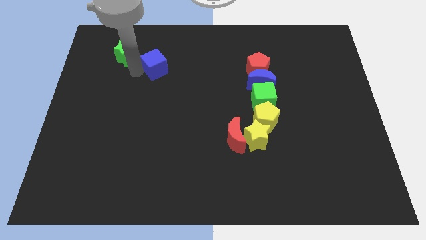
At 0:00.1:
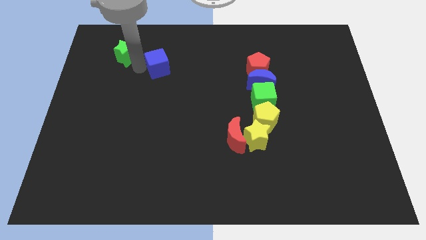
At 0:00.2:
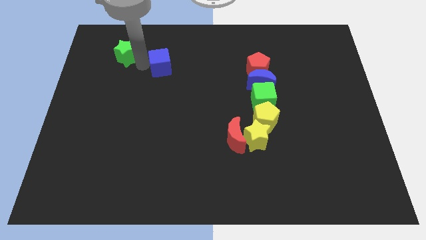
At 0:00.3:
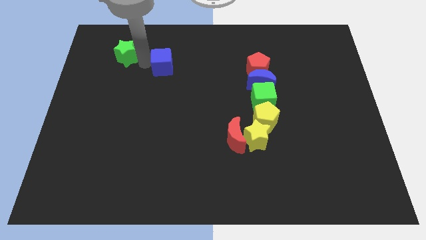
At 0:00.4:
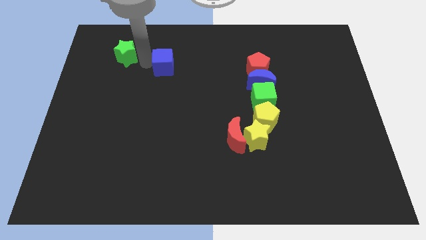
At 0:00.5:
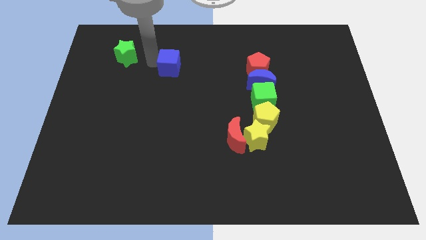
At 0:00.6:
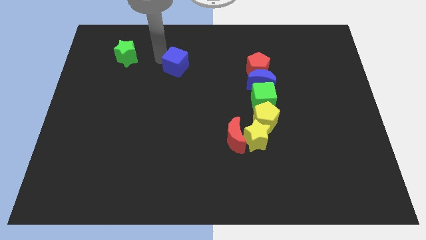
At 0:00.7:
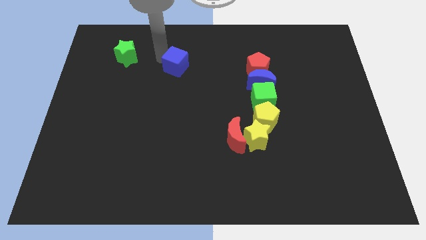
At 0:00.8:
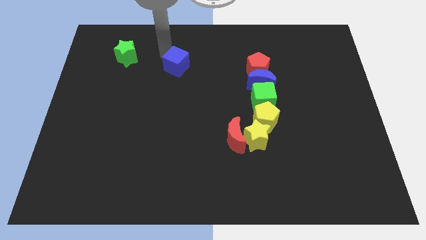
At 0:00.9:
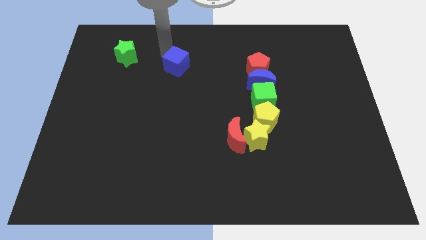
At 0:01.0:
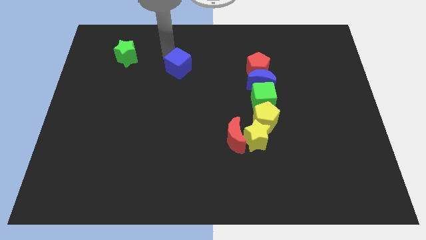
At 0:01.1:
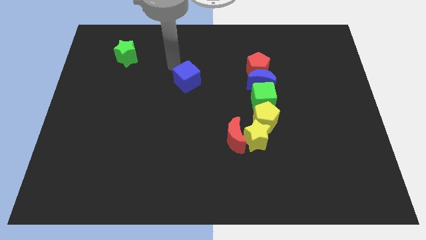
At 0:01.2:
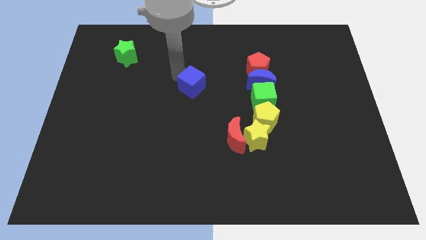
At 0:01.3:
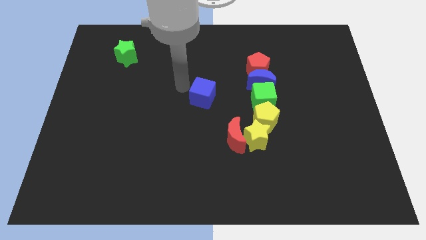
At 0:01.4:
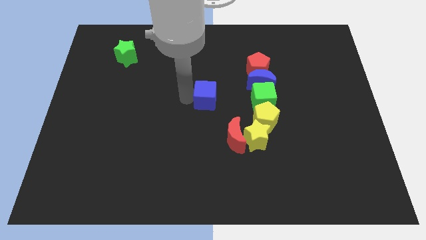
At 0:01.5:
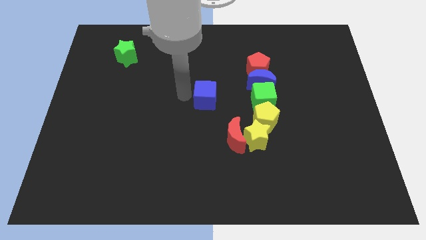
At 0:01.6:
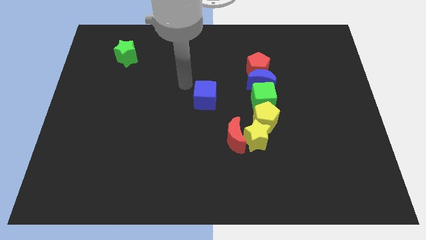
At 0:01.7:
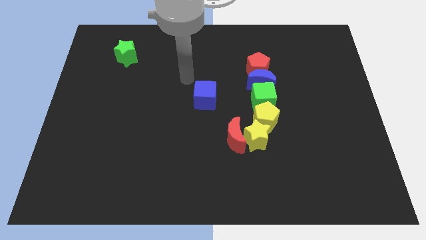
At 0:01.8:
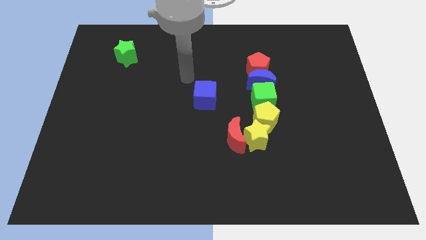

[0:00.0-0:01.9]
place the blue cube at the center of the board

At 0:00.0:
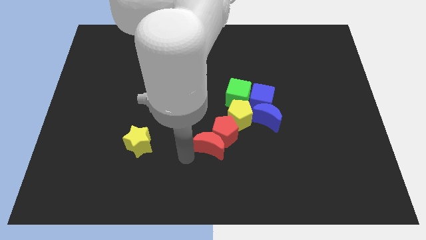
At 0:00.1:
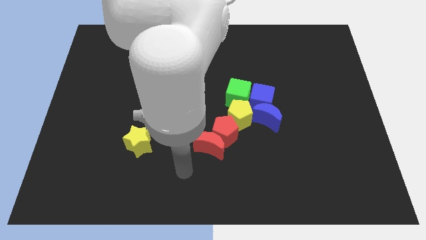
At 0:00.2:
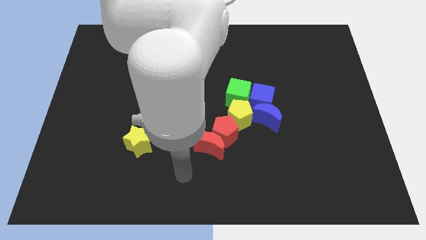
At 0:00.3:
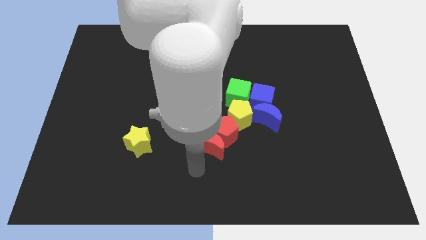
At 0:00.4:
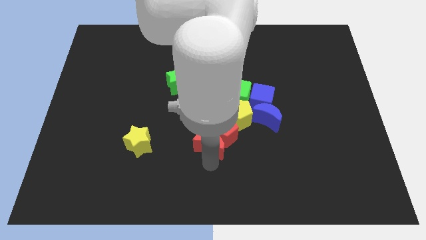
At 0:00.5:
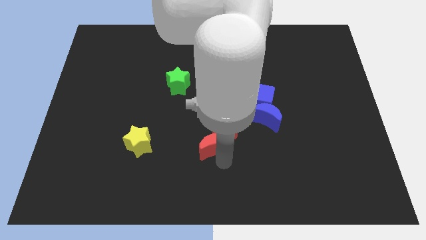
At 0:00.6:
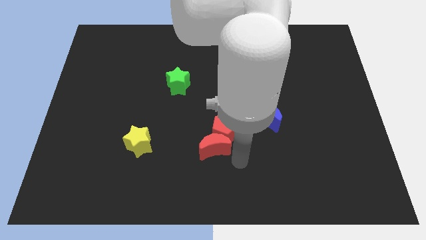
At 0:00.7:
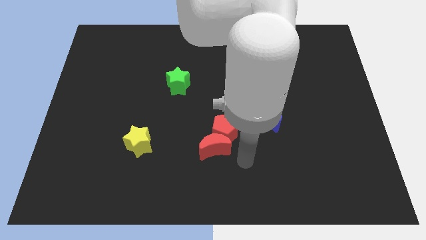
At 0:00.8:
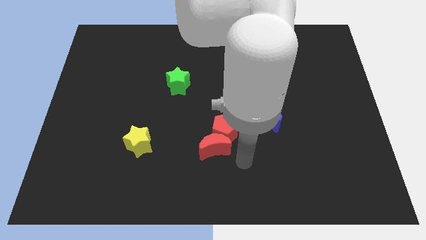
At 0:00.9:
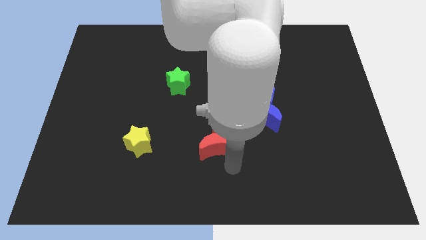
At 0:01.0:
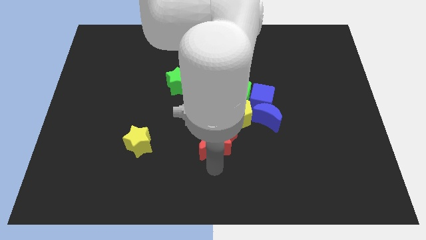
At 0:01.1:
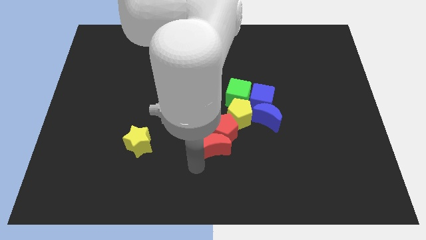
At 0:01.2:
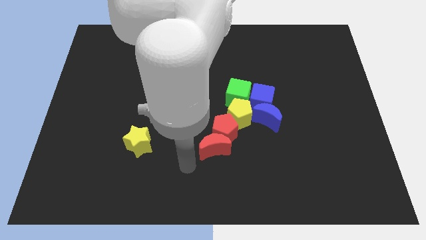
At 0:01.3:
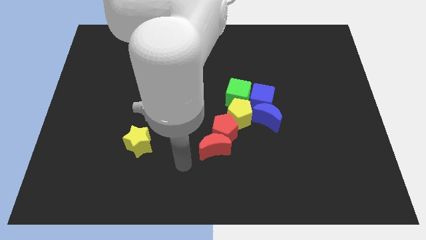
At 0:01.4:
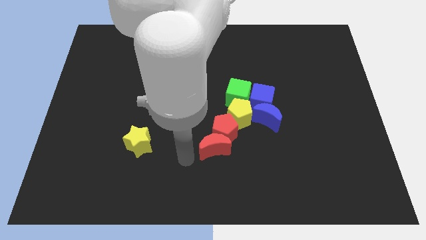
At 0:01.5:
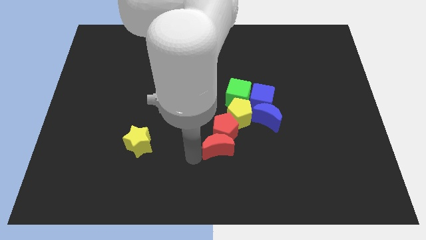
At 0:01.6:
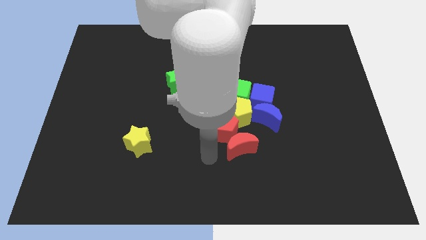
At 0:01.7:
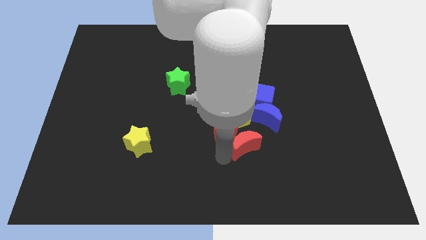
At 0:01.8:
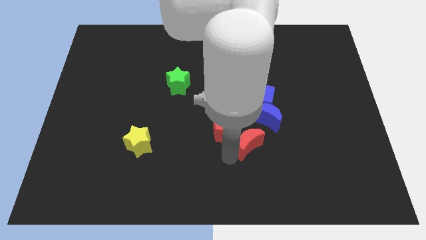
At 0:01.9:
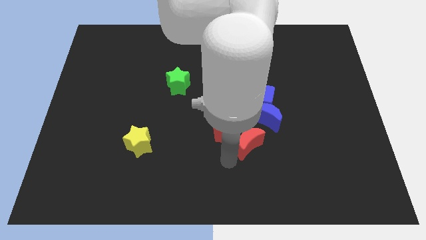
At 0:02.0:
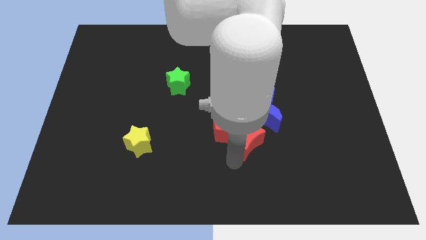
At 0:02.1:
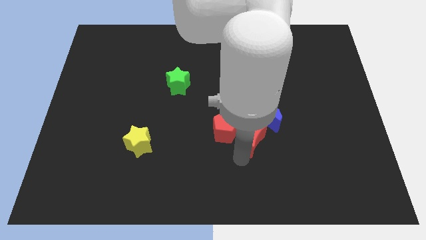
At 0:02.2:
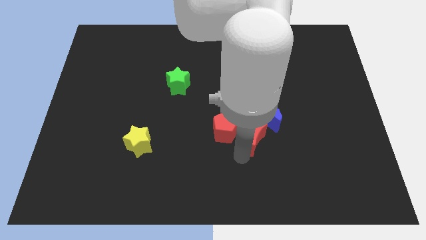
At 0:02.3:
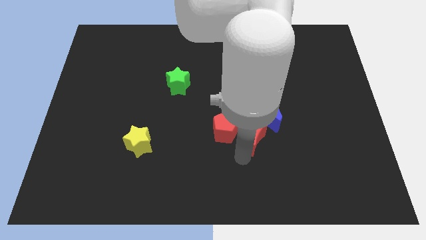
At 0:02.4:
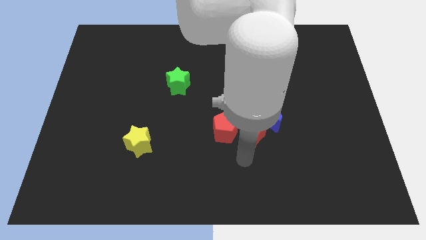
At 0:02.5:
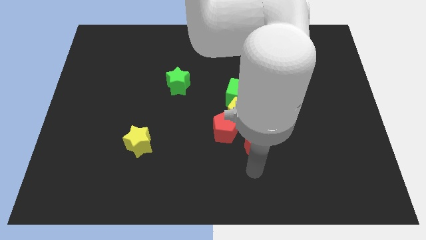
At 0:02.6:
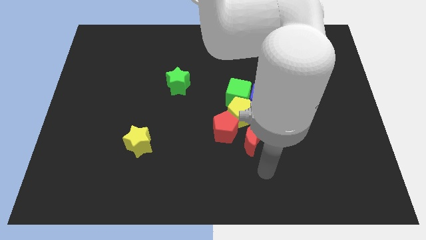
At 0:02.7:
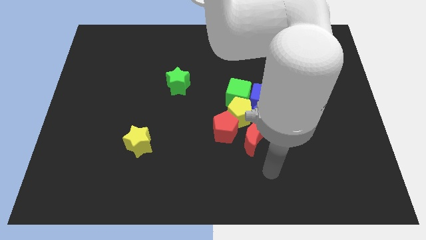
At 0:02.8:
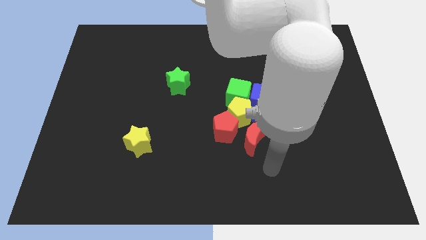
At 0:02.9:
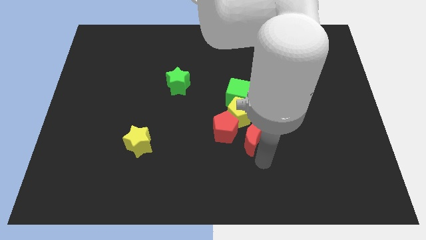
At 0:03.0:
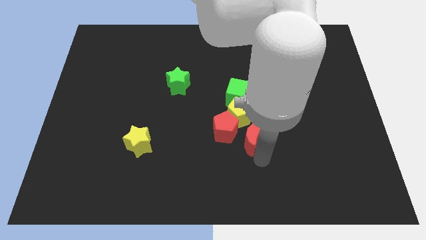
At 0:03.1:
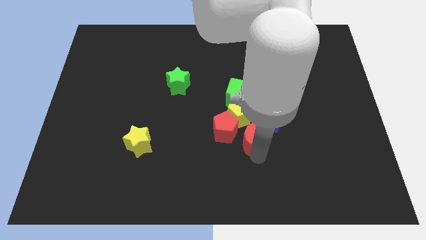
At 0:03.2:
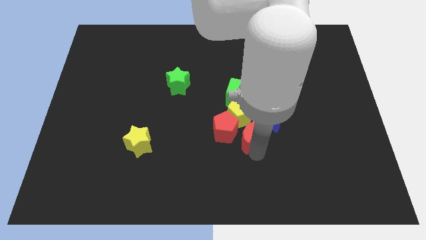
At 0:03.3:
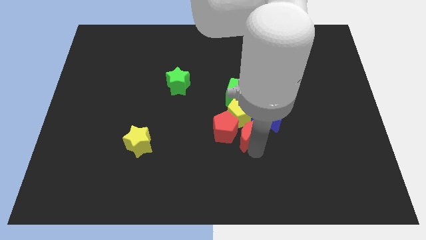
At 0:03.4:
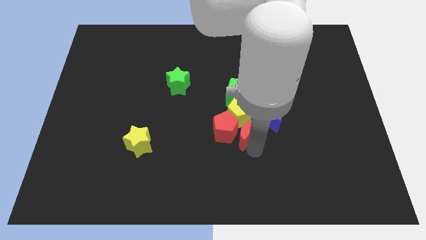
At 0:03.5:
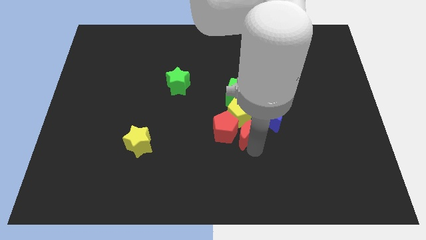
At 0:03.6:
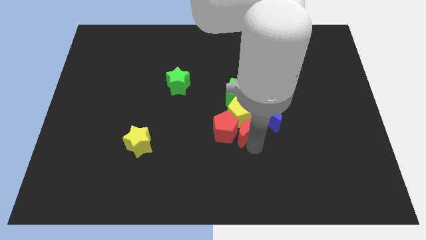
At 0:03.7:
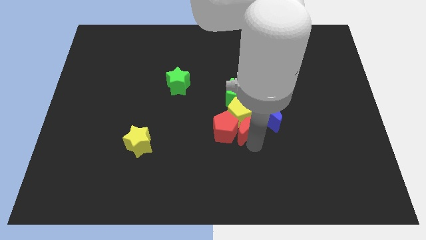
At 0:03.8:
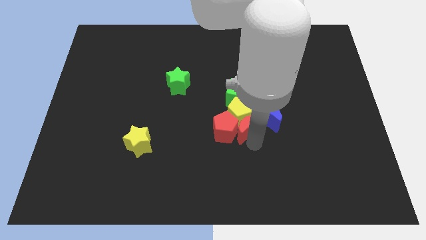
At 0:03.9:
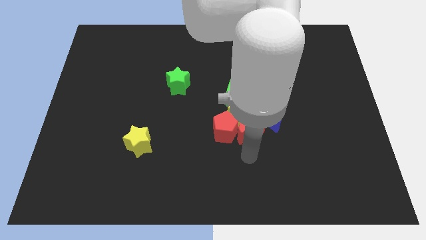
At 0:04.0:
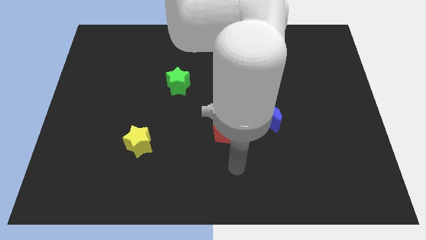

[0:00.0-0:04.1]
adjust the red moon to the right of red pentagon

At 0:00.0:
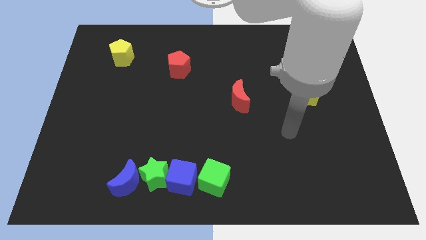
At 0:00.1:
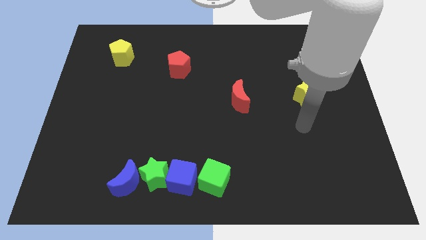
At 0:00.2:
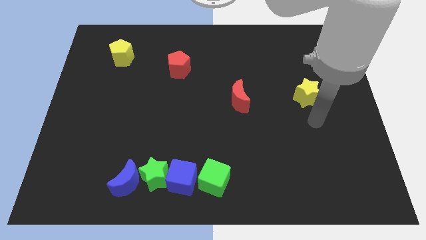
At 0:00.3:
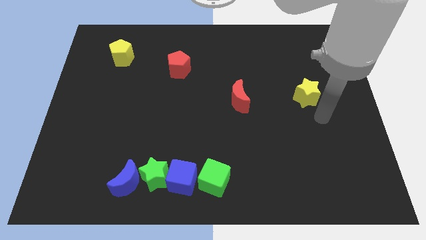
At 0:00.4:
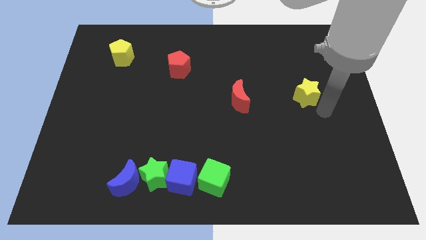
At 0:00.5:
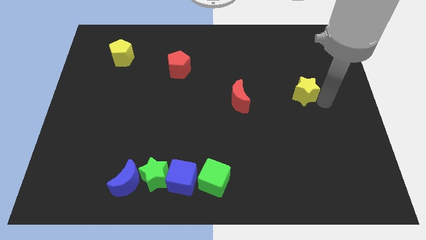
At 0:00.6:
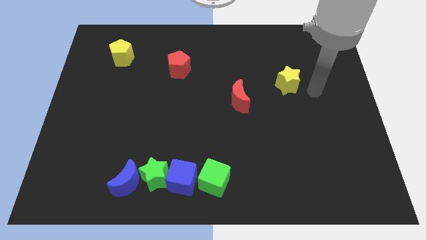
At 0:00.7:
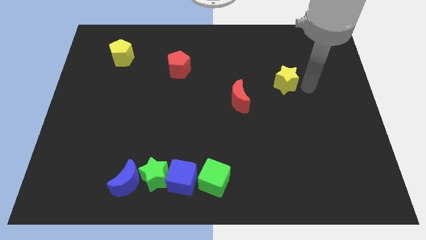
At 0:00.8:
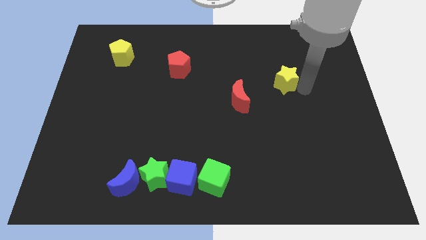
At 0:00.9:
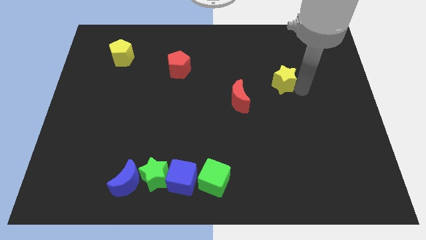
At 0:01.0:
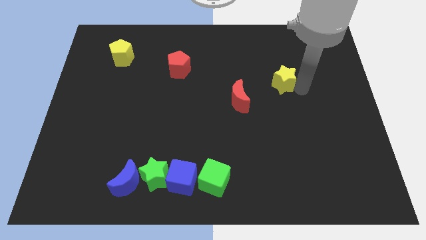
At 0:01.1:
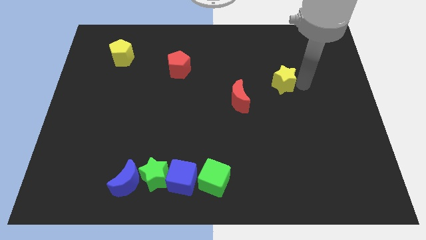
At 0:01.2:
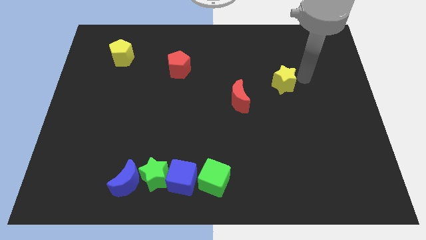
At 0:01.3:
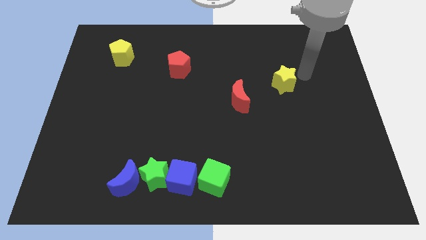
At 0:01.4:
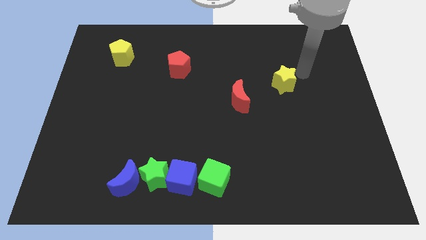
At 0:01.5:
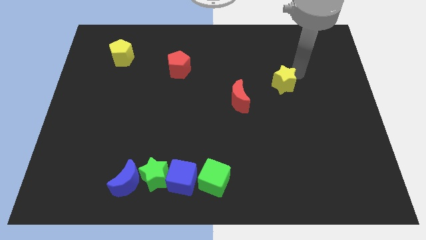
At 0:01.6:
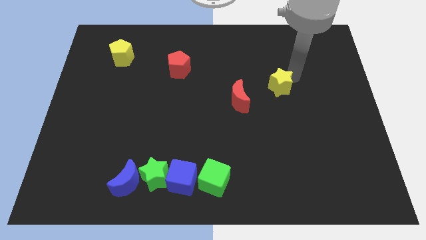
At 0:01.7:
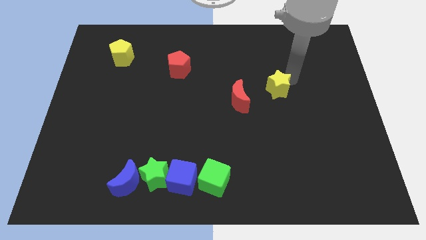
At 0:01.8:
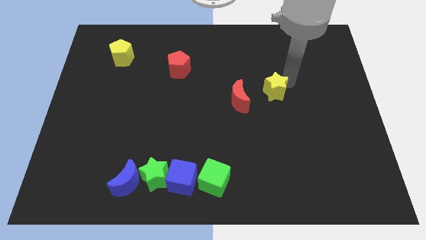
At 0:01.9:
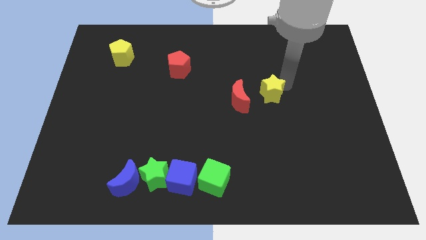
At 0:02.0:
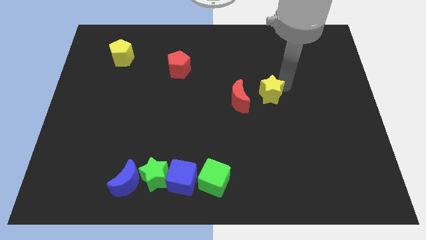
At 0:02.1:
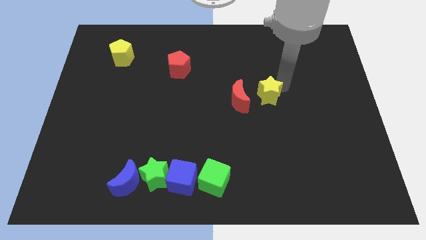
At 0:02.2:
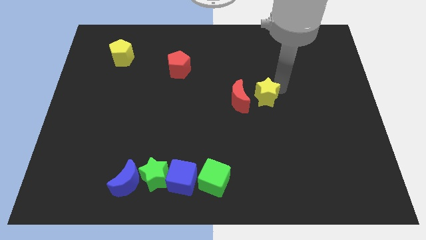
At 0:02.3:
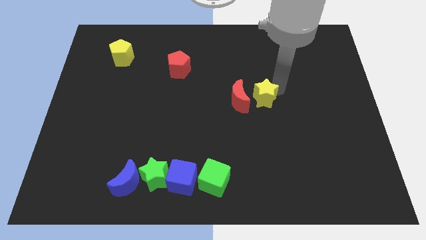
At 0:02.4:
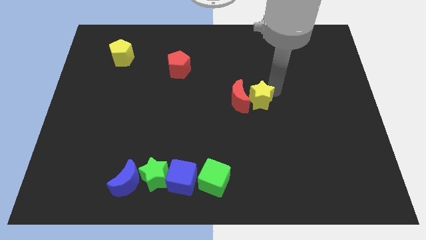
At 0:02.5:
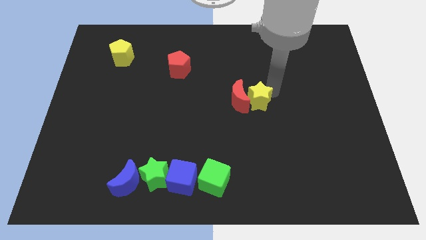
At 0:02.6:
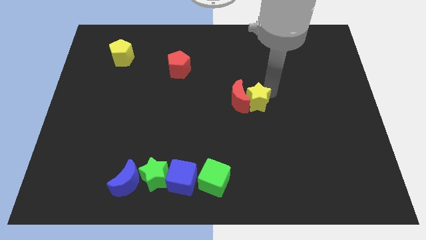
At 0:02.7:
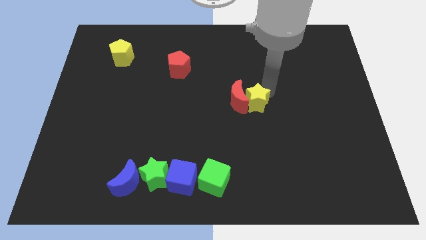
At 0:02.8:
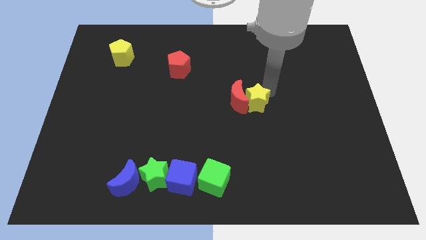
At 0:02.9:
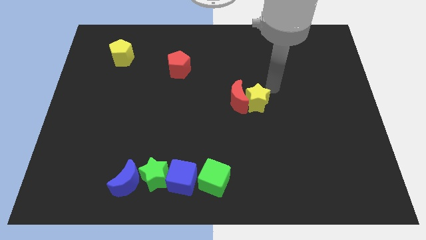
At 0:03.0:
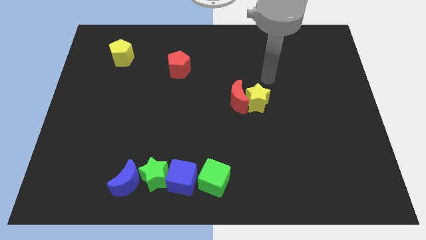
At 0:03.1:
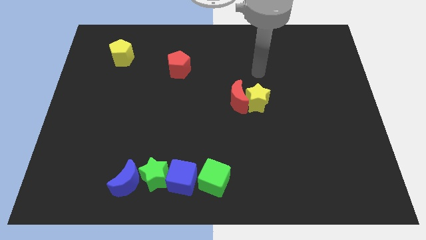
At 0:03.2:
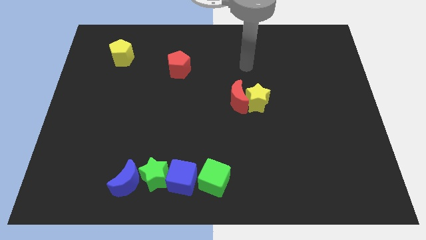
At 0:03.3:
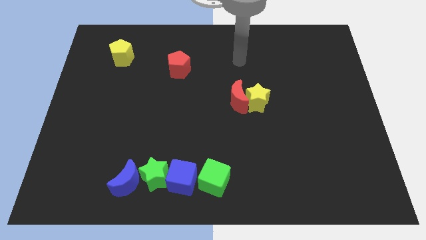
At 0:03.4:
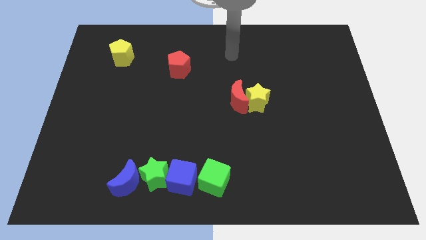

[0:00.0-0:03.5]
move yellow star right to the red moon
